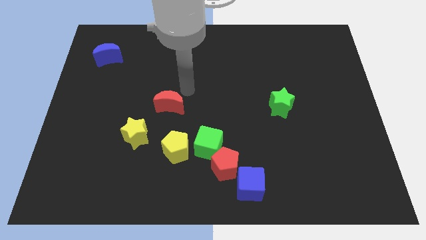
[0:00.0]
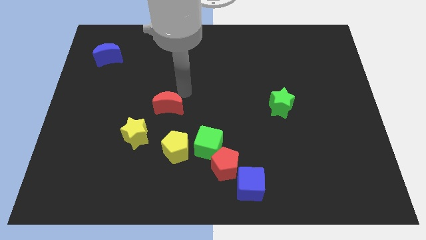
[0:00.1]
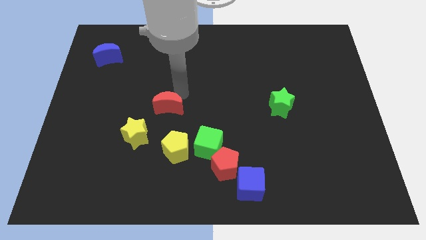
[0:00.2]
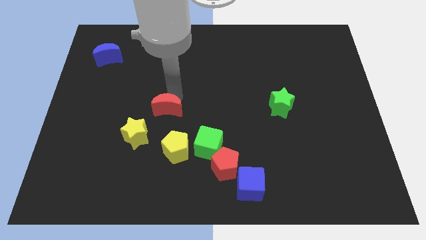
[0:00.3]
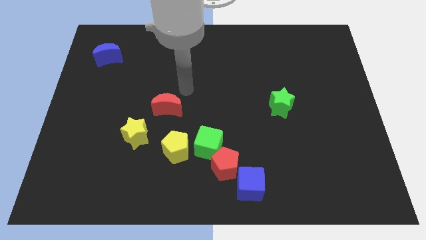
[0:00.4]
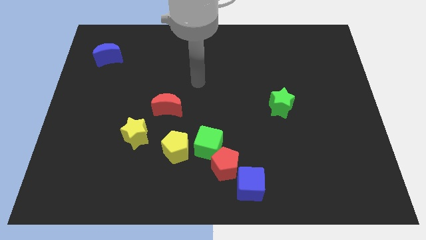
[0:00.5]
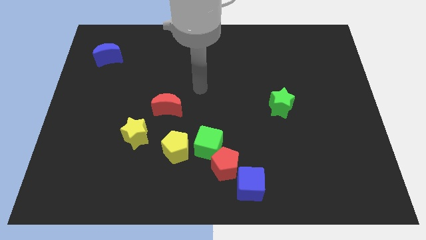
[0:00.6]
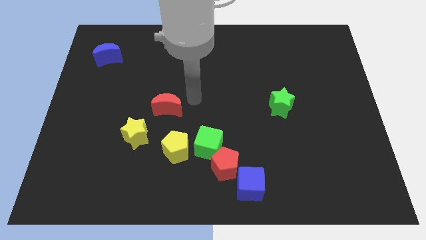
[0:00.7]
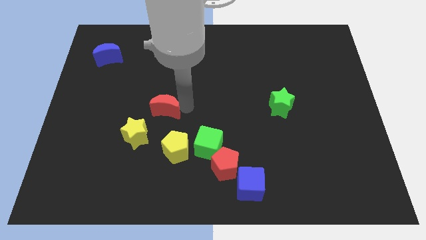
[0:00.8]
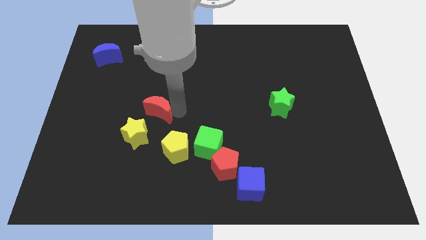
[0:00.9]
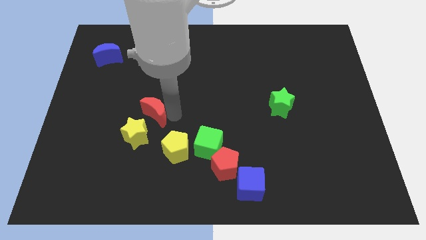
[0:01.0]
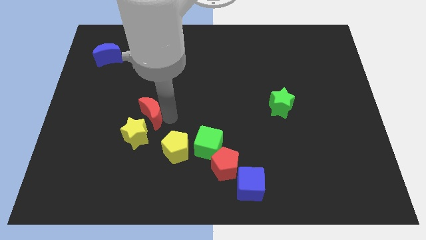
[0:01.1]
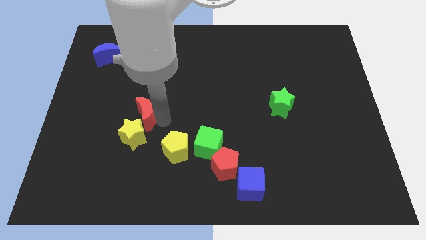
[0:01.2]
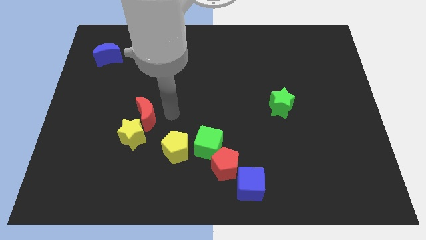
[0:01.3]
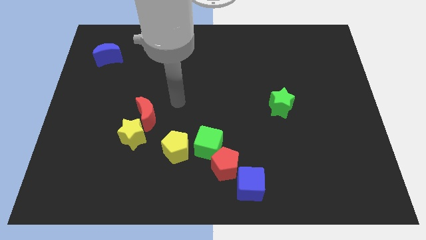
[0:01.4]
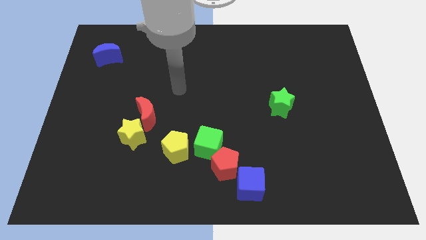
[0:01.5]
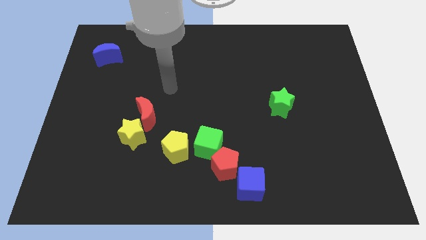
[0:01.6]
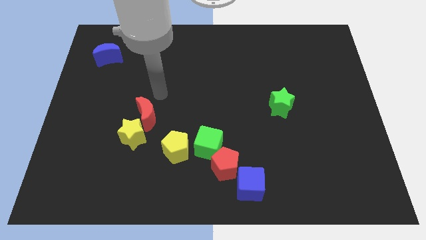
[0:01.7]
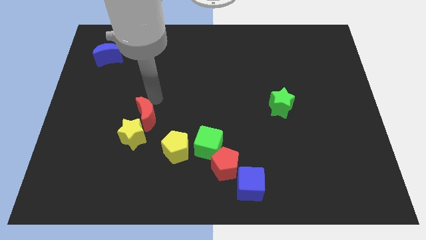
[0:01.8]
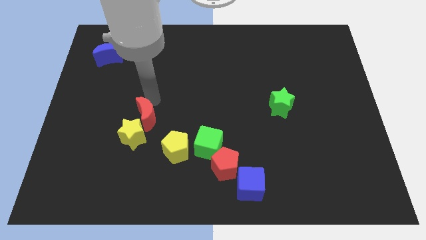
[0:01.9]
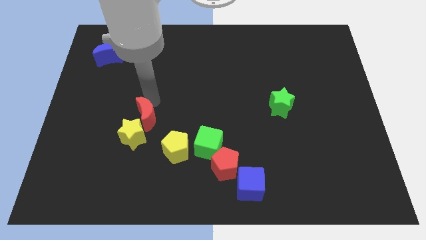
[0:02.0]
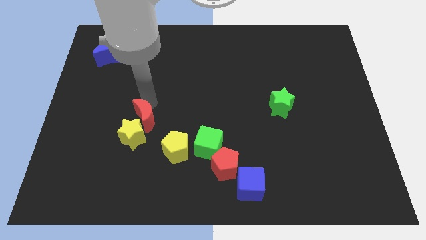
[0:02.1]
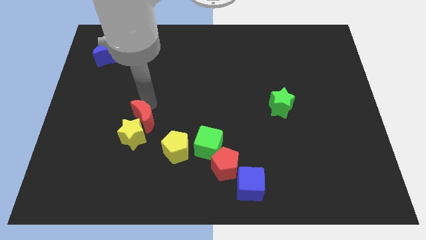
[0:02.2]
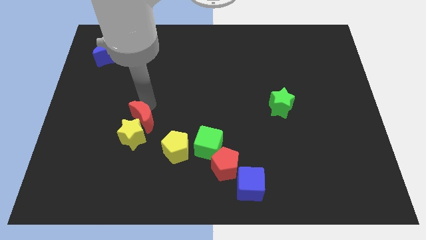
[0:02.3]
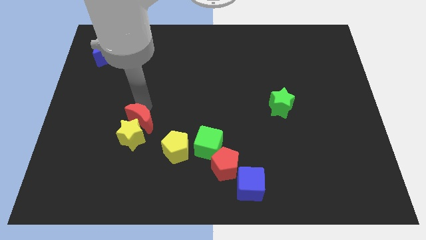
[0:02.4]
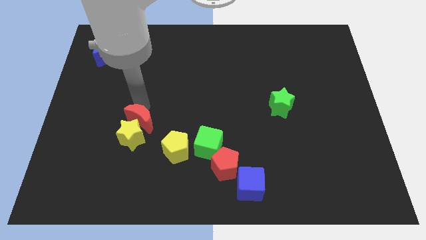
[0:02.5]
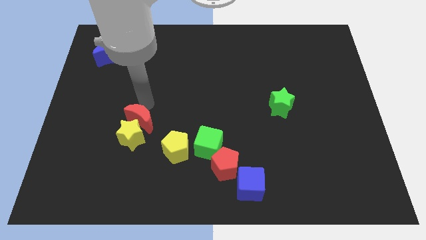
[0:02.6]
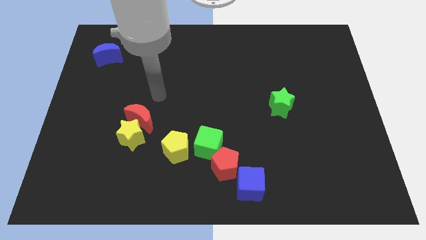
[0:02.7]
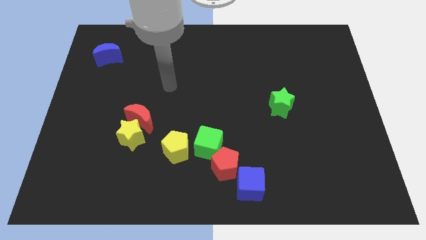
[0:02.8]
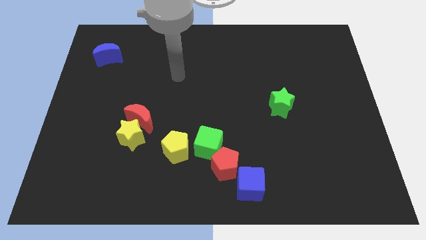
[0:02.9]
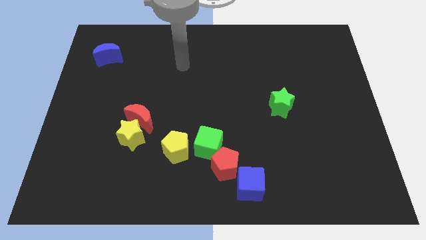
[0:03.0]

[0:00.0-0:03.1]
push the red moon above the yellow star

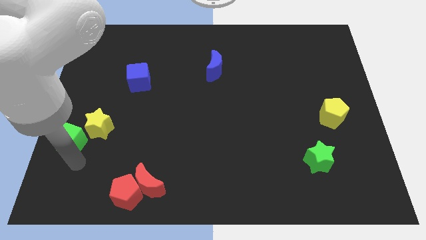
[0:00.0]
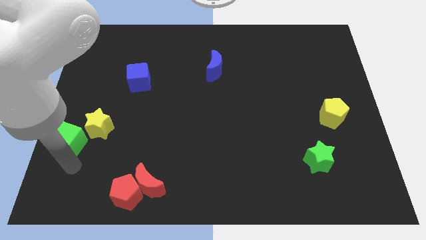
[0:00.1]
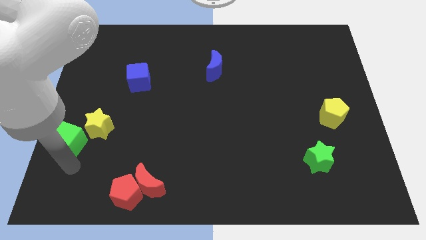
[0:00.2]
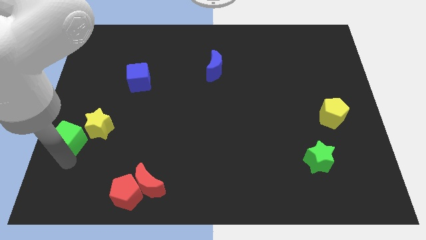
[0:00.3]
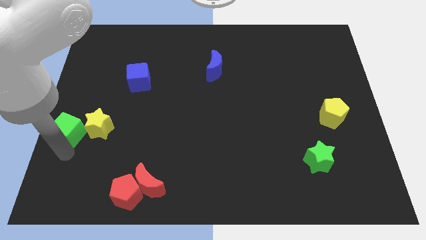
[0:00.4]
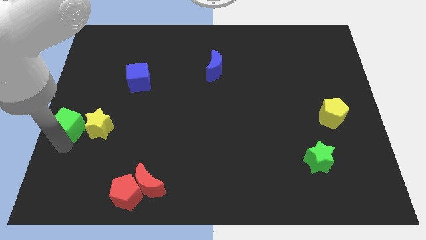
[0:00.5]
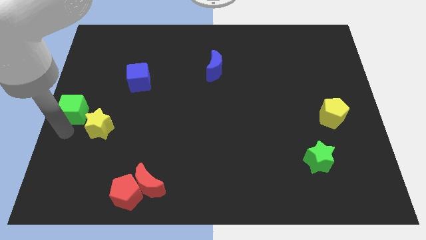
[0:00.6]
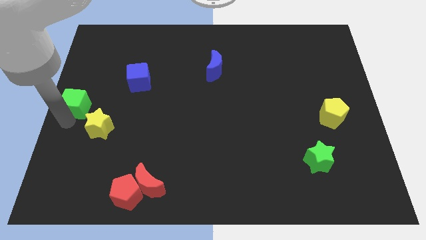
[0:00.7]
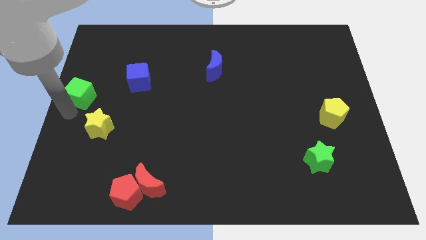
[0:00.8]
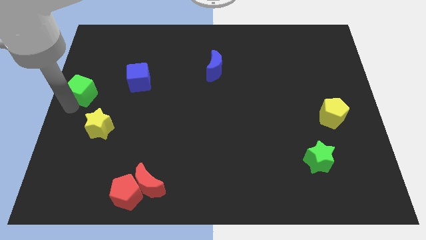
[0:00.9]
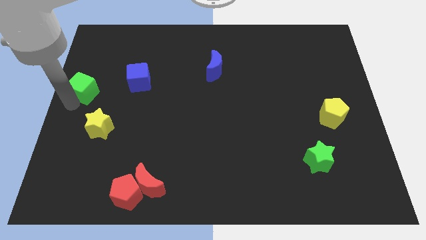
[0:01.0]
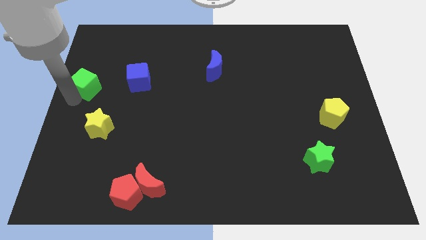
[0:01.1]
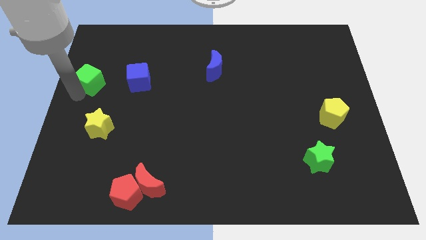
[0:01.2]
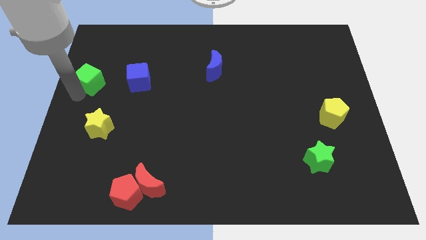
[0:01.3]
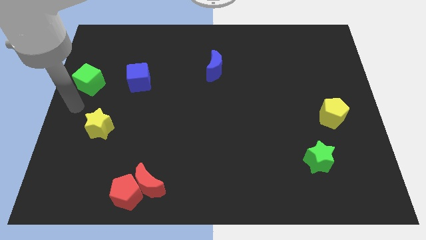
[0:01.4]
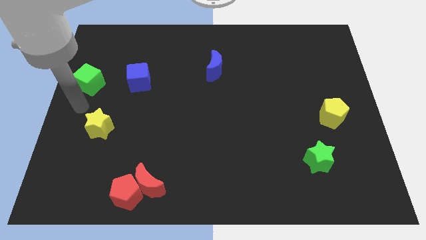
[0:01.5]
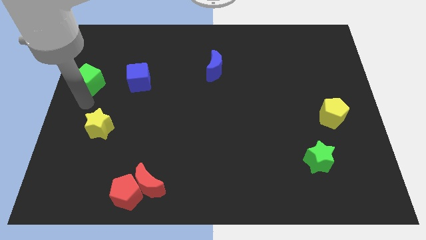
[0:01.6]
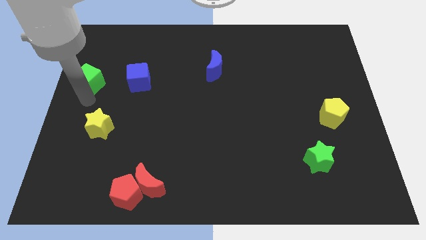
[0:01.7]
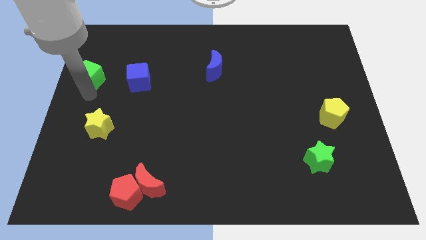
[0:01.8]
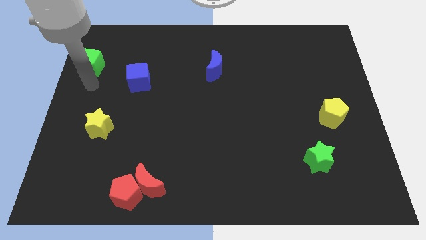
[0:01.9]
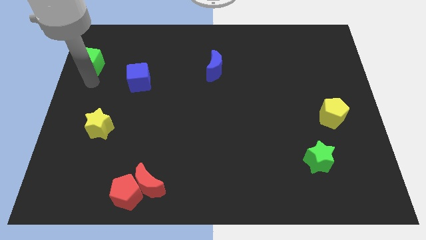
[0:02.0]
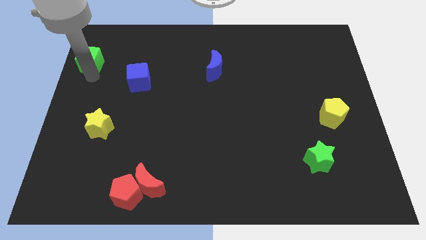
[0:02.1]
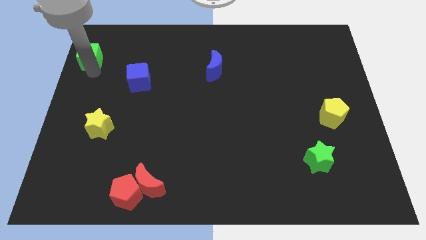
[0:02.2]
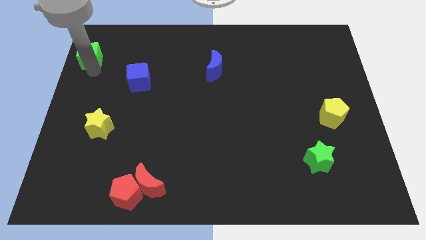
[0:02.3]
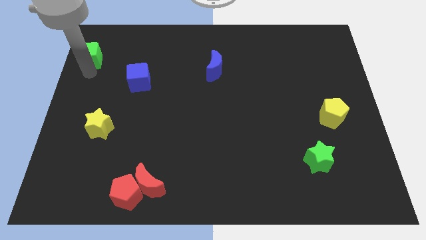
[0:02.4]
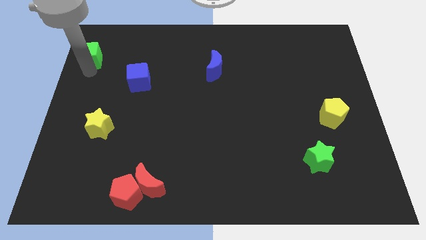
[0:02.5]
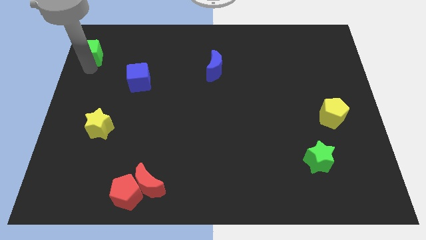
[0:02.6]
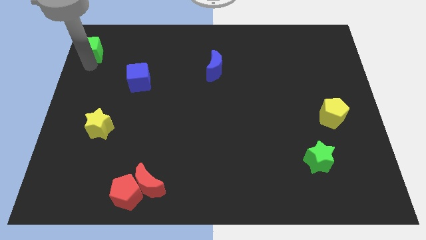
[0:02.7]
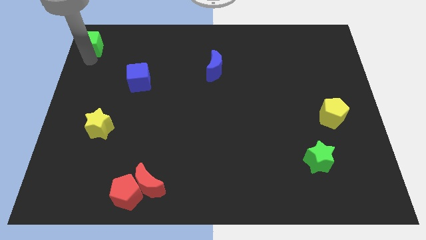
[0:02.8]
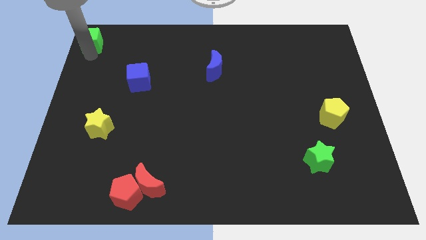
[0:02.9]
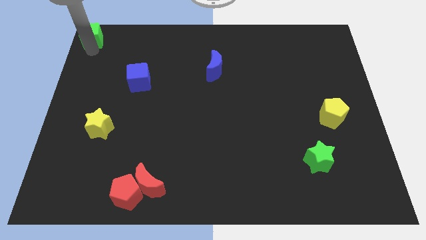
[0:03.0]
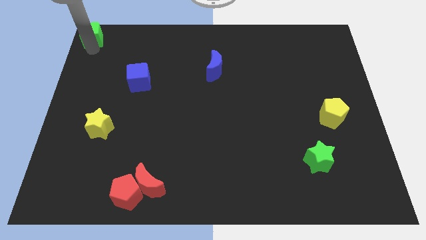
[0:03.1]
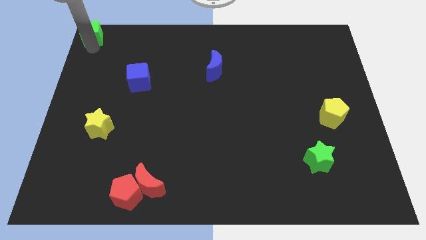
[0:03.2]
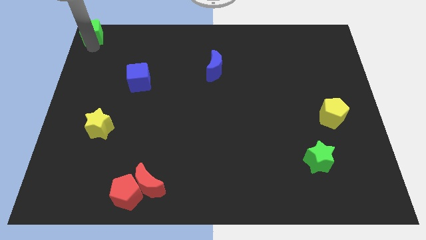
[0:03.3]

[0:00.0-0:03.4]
place green cube to top left corner of the board

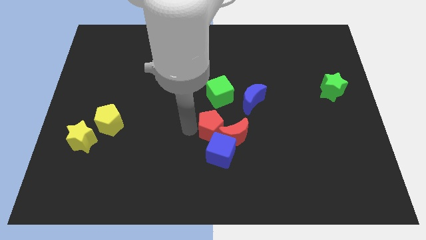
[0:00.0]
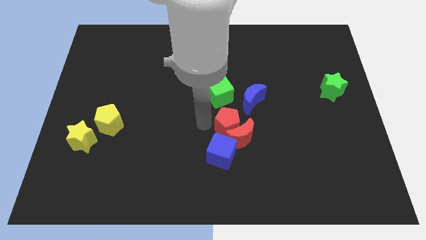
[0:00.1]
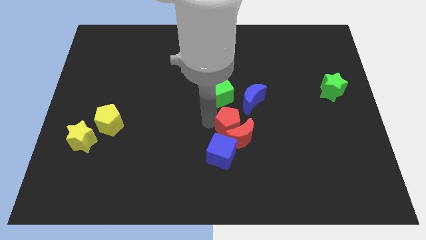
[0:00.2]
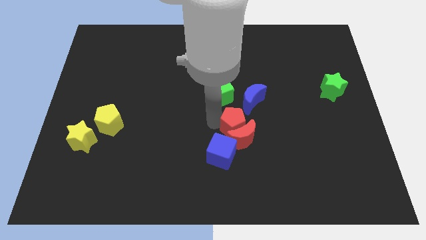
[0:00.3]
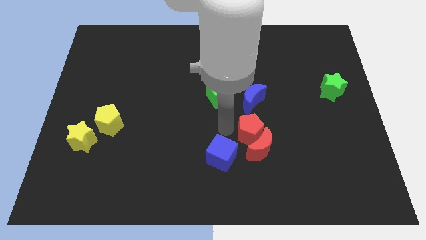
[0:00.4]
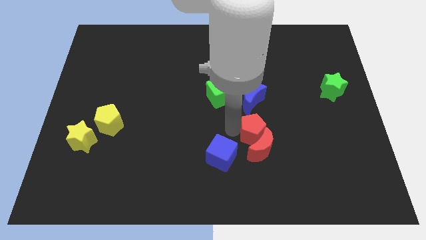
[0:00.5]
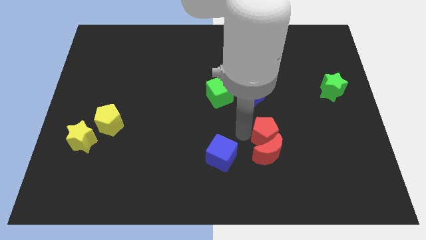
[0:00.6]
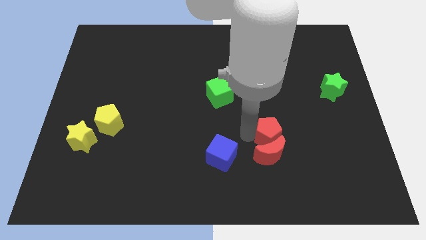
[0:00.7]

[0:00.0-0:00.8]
push the red pentagon into the red crescent

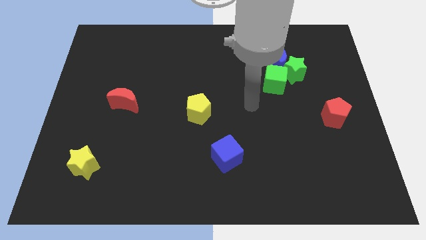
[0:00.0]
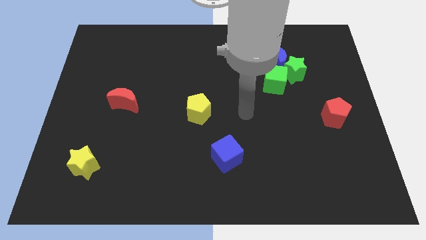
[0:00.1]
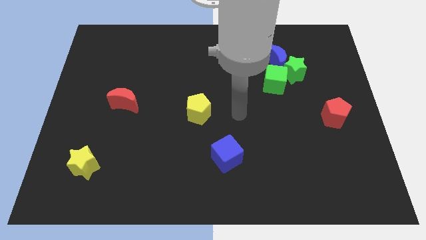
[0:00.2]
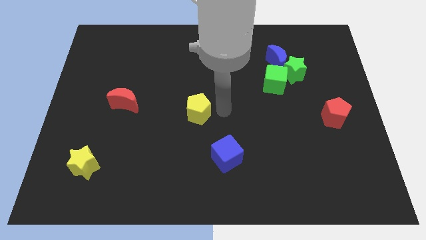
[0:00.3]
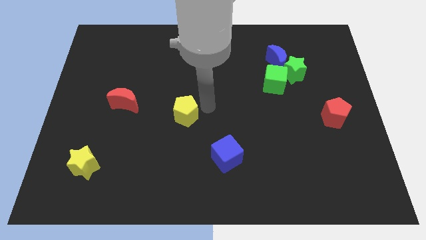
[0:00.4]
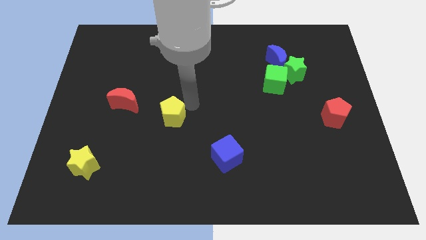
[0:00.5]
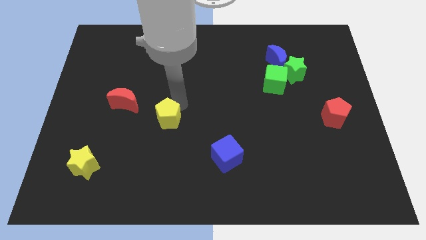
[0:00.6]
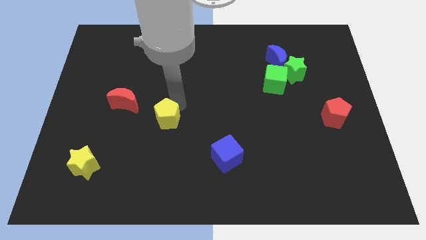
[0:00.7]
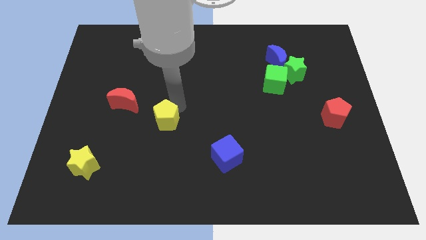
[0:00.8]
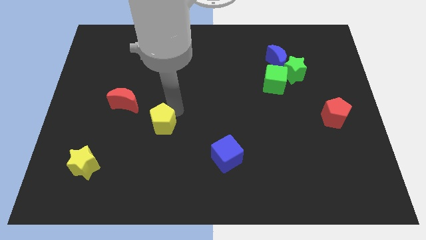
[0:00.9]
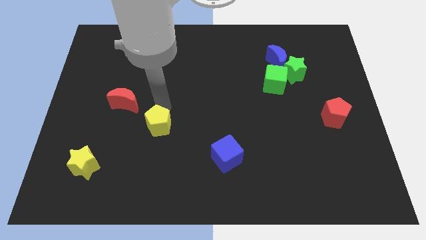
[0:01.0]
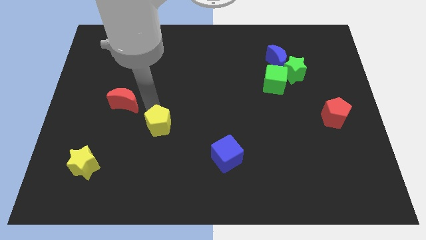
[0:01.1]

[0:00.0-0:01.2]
push yellow pentagon diagonally bottom right to the red crescent

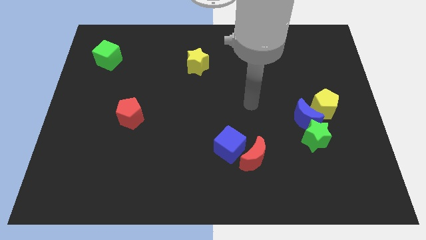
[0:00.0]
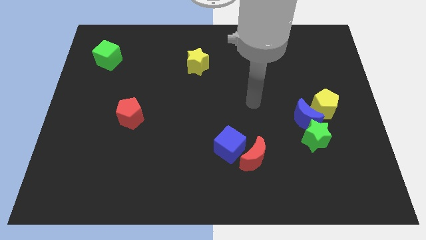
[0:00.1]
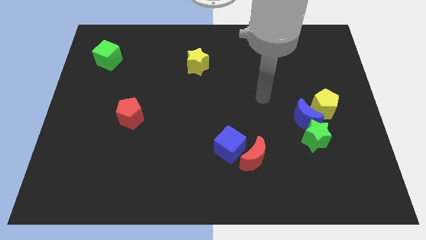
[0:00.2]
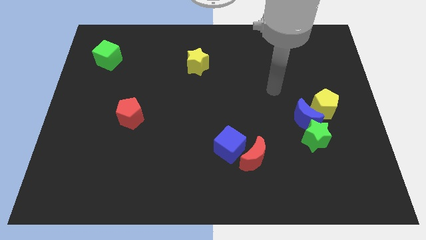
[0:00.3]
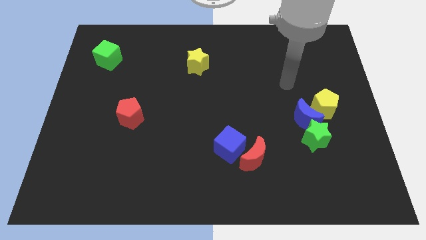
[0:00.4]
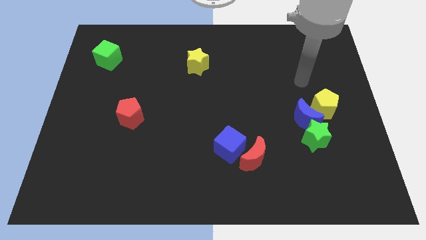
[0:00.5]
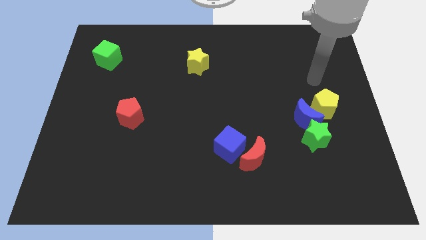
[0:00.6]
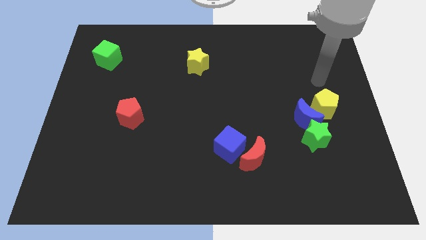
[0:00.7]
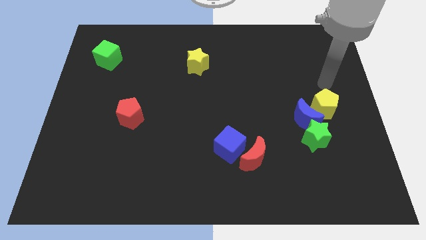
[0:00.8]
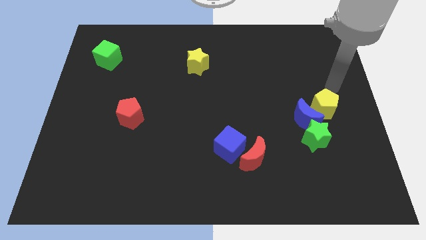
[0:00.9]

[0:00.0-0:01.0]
place your arm above yellow pentagon
